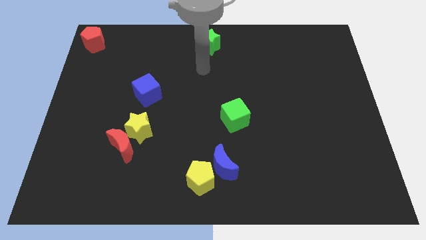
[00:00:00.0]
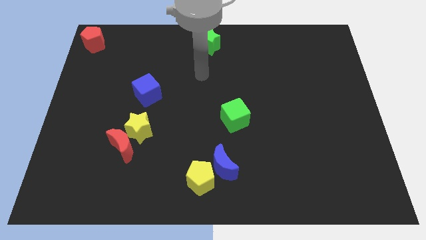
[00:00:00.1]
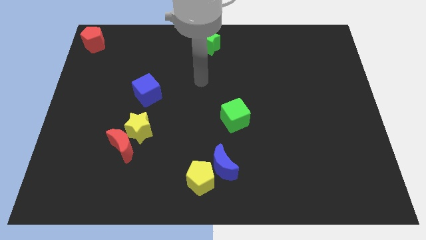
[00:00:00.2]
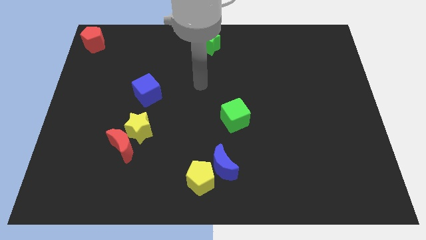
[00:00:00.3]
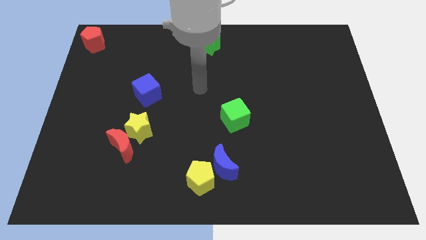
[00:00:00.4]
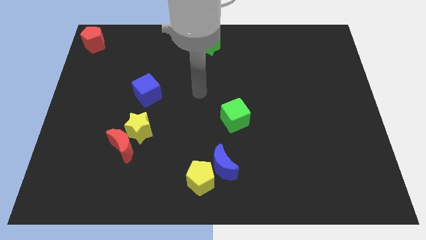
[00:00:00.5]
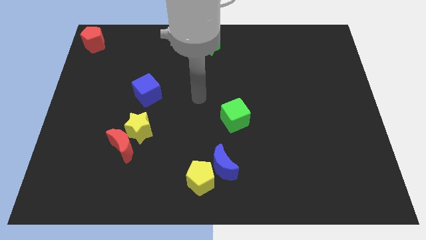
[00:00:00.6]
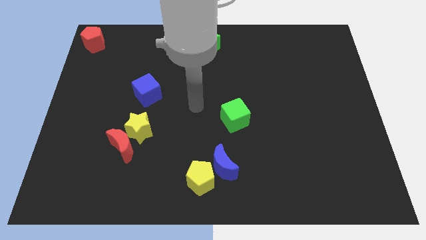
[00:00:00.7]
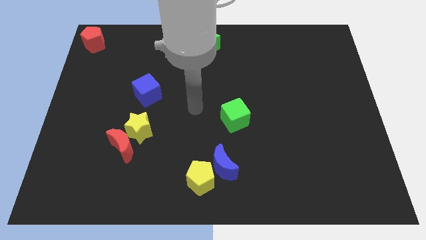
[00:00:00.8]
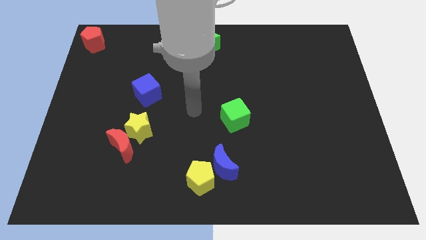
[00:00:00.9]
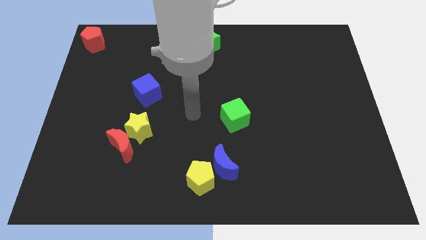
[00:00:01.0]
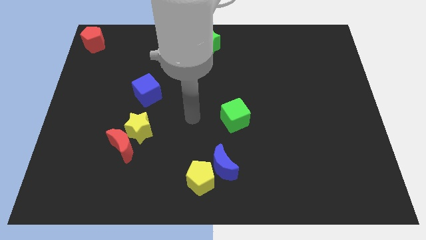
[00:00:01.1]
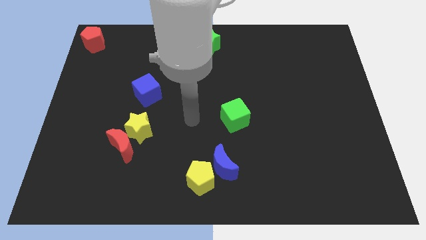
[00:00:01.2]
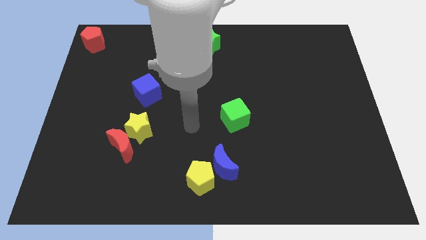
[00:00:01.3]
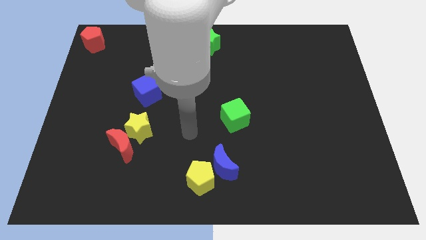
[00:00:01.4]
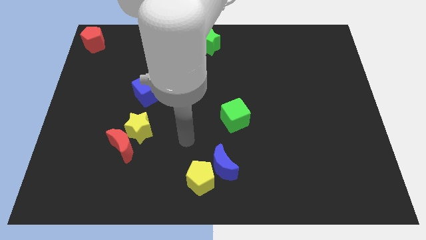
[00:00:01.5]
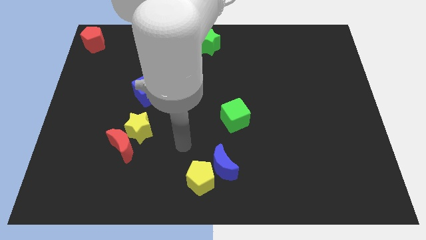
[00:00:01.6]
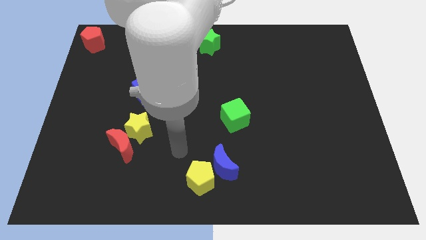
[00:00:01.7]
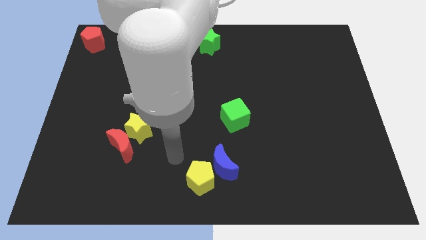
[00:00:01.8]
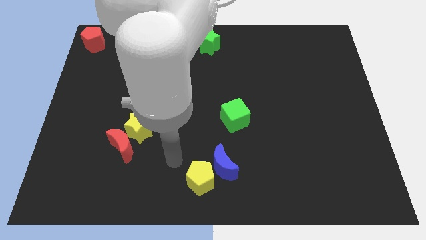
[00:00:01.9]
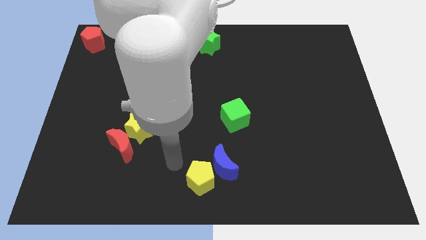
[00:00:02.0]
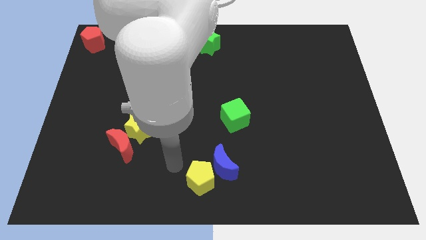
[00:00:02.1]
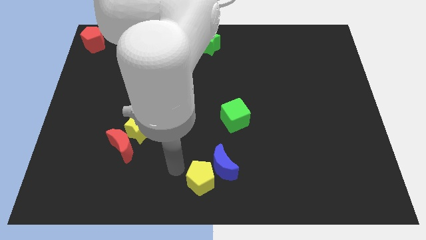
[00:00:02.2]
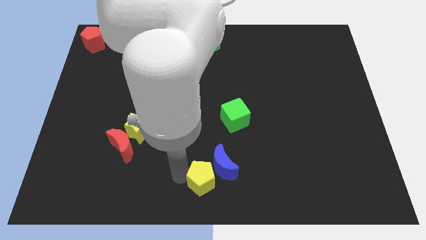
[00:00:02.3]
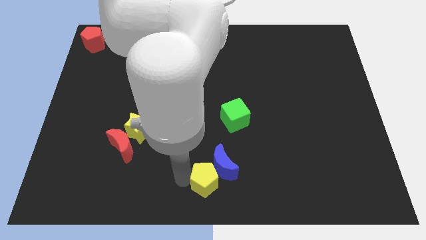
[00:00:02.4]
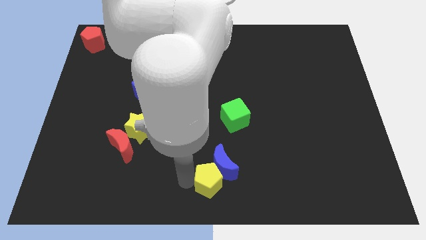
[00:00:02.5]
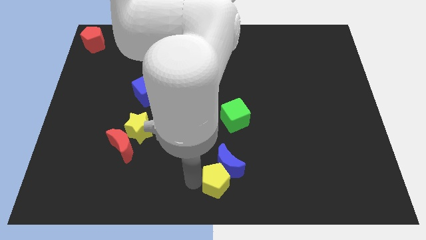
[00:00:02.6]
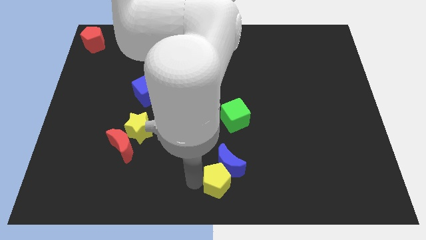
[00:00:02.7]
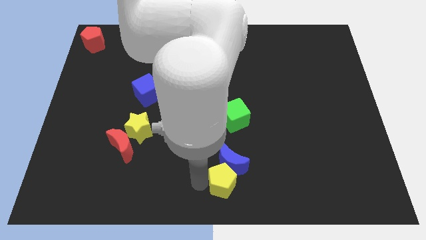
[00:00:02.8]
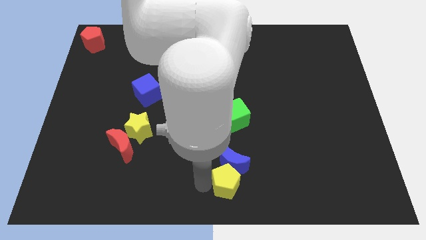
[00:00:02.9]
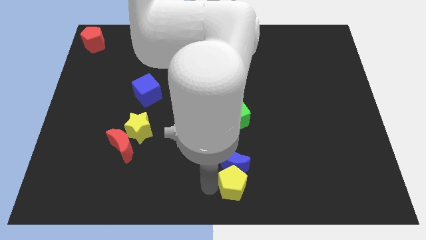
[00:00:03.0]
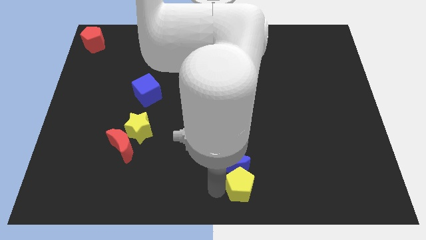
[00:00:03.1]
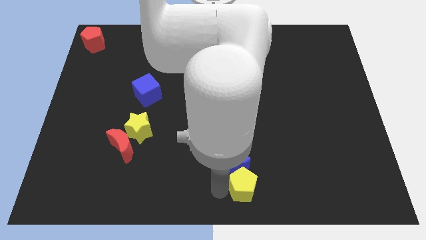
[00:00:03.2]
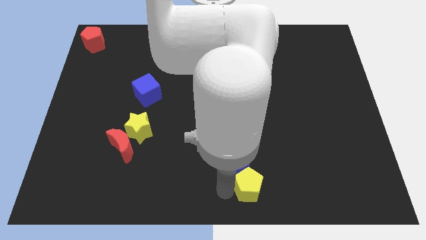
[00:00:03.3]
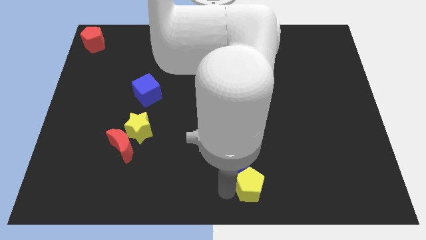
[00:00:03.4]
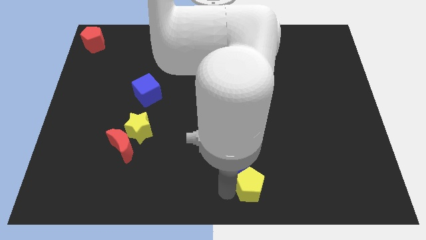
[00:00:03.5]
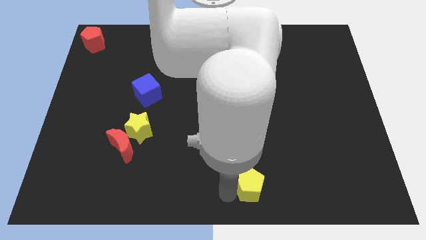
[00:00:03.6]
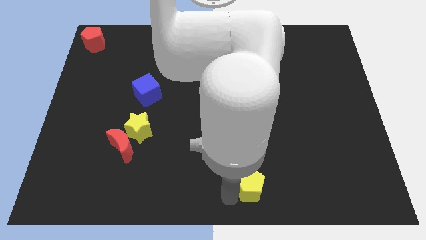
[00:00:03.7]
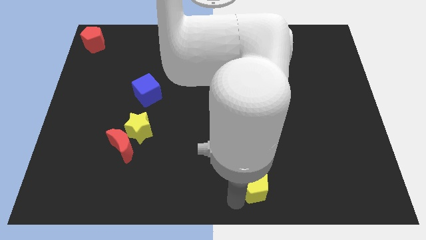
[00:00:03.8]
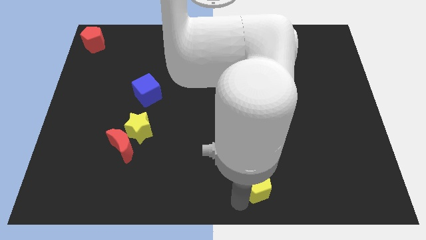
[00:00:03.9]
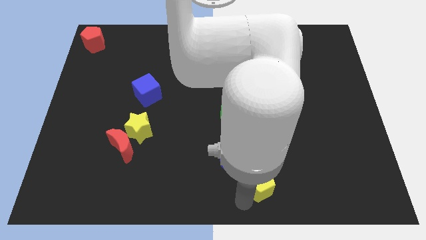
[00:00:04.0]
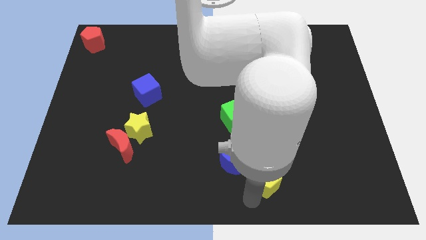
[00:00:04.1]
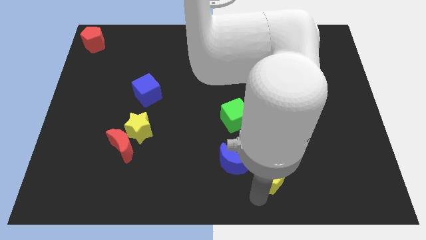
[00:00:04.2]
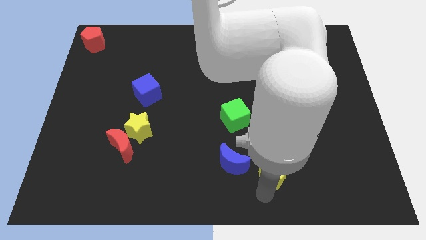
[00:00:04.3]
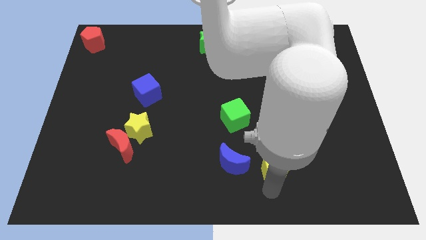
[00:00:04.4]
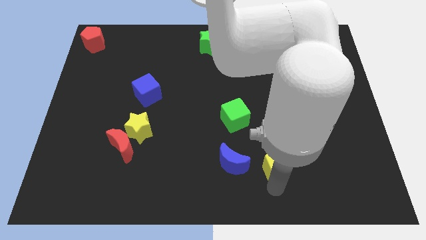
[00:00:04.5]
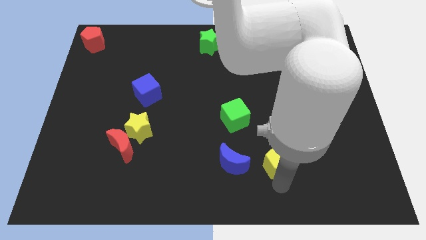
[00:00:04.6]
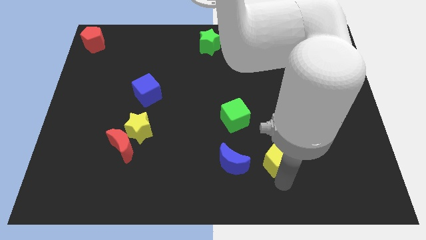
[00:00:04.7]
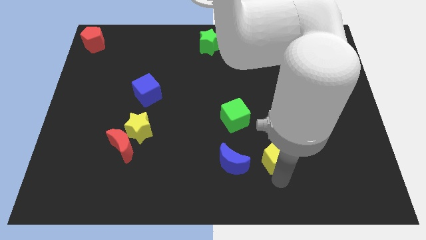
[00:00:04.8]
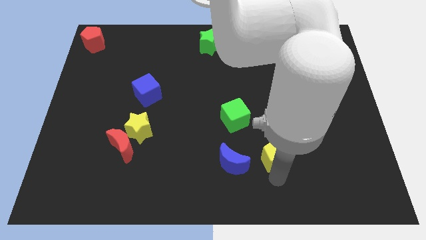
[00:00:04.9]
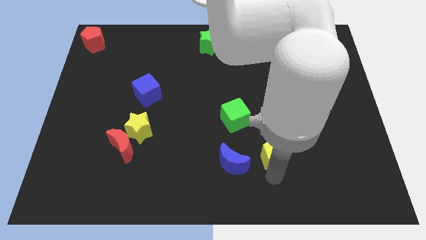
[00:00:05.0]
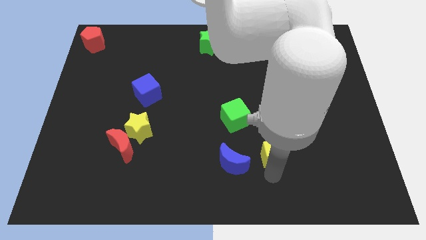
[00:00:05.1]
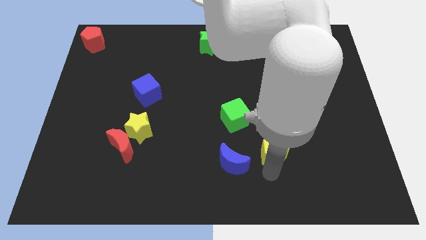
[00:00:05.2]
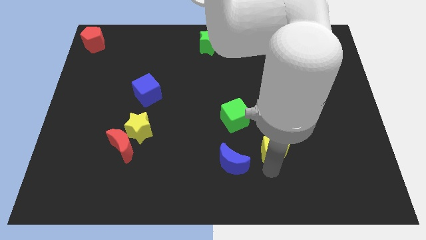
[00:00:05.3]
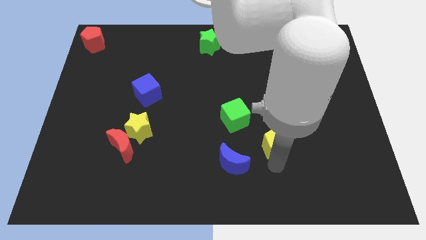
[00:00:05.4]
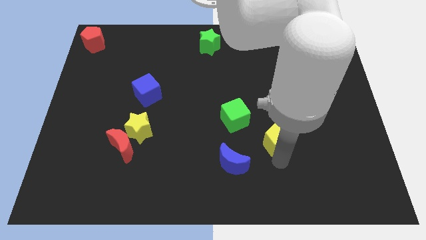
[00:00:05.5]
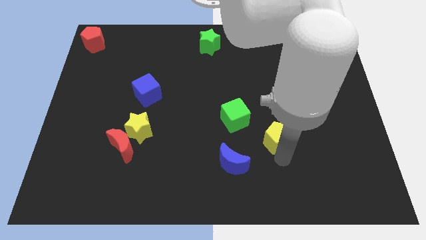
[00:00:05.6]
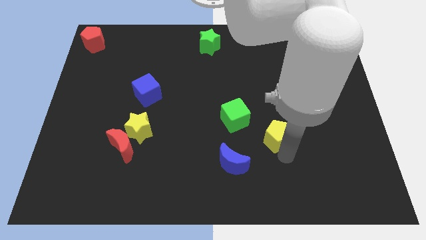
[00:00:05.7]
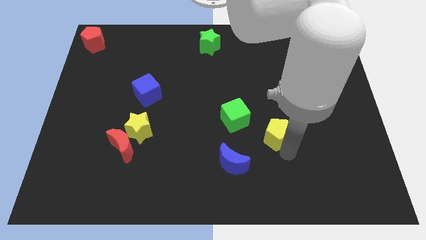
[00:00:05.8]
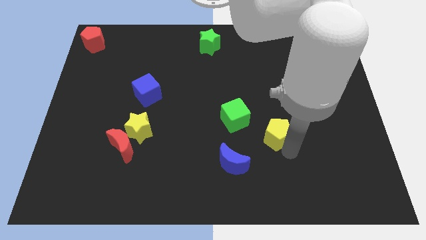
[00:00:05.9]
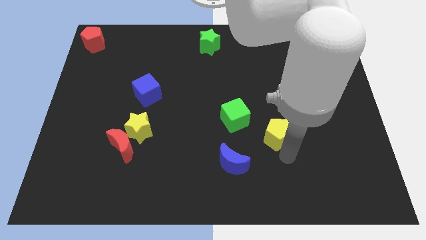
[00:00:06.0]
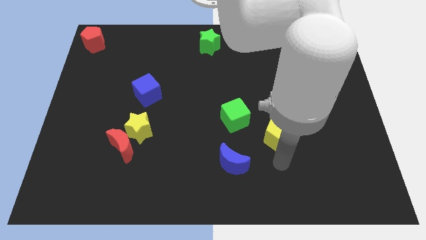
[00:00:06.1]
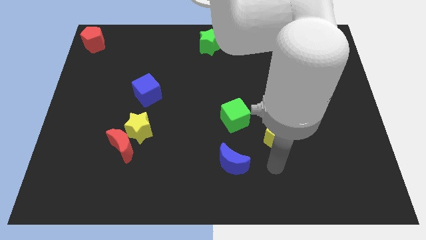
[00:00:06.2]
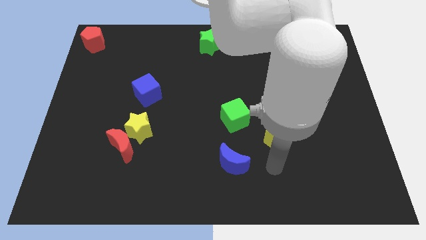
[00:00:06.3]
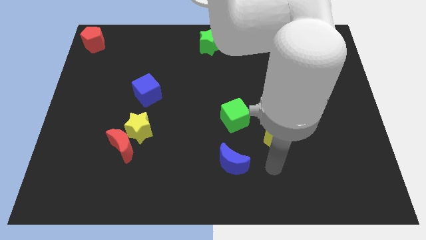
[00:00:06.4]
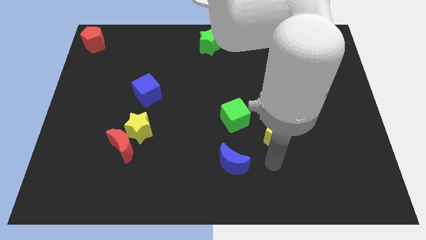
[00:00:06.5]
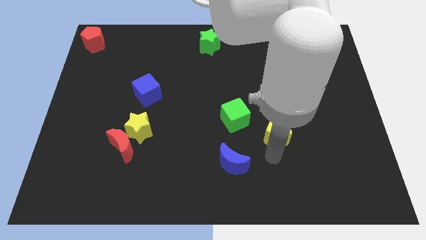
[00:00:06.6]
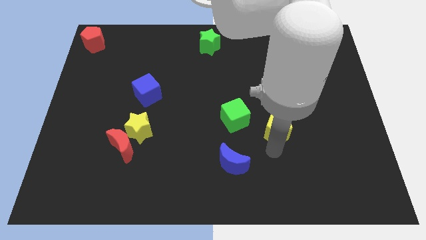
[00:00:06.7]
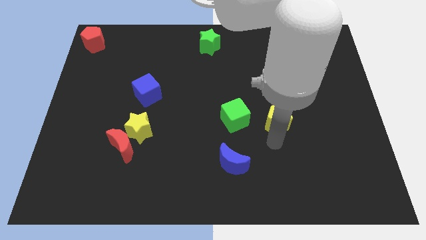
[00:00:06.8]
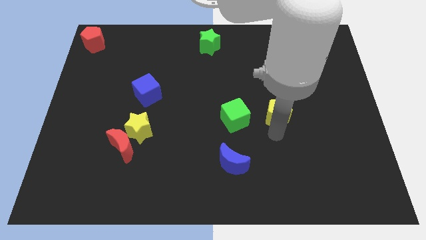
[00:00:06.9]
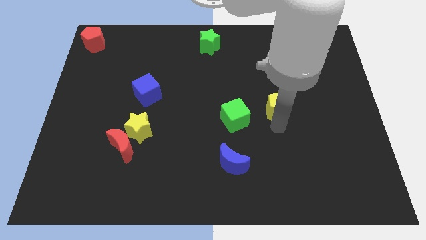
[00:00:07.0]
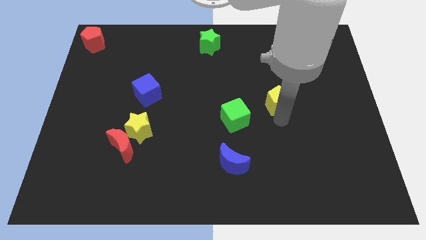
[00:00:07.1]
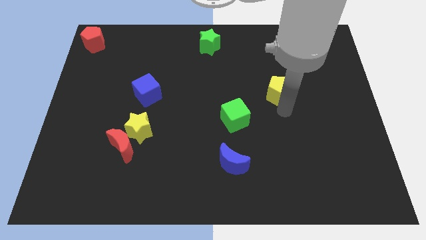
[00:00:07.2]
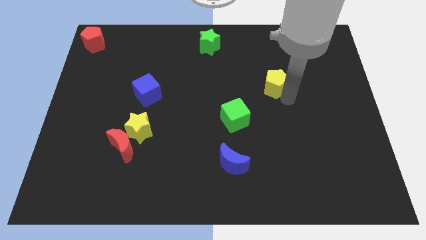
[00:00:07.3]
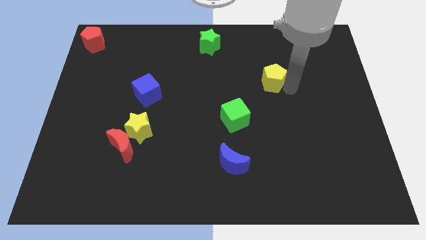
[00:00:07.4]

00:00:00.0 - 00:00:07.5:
move the yellow pentagon away from the left side of the blue crescent

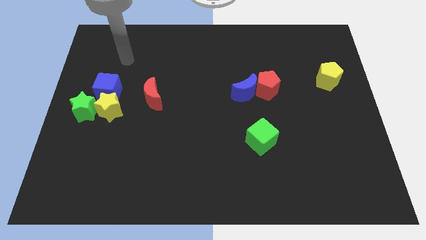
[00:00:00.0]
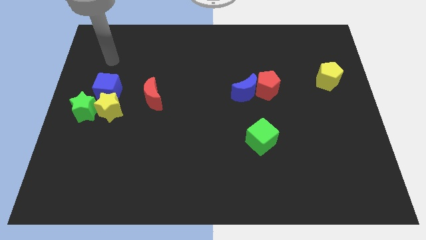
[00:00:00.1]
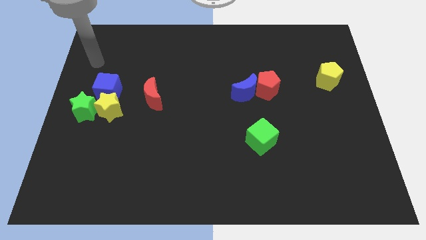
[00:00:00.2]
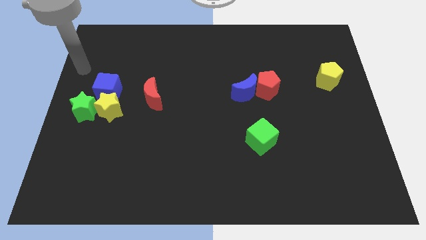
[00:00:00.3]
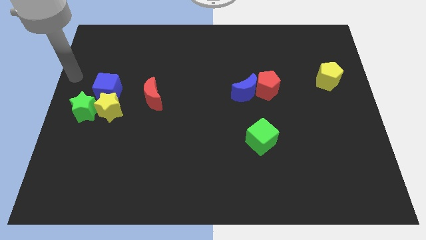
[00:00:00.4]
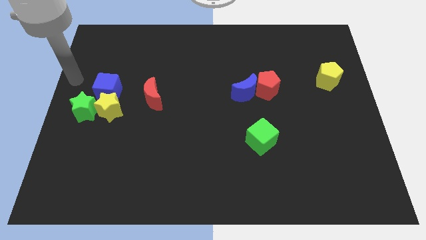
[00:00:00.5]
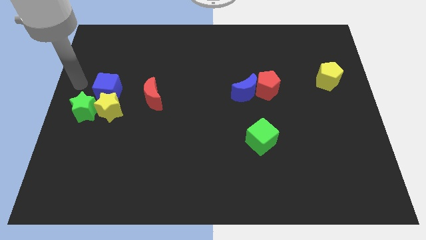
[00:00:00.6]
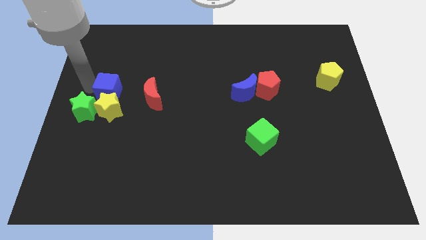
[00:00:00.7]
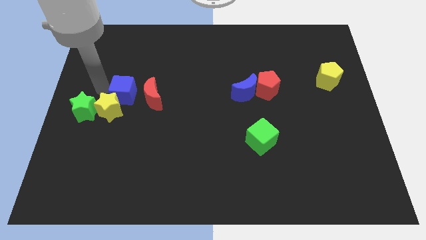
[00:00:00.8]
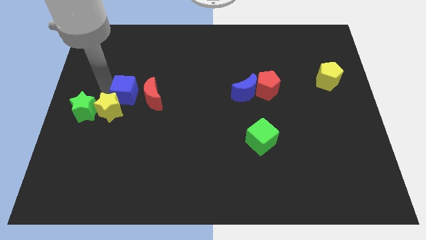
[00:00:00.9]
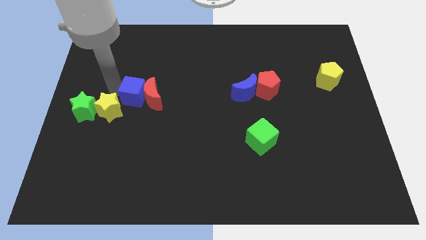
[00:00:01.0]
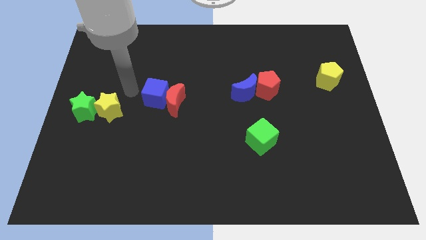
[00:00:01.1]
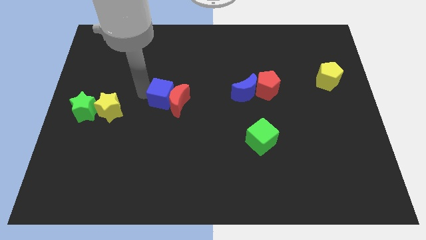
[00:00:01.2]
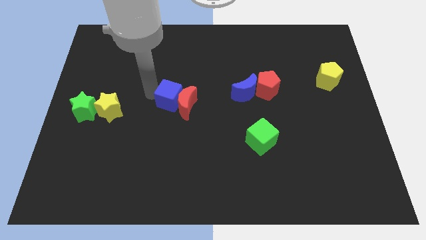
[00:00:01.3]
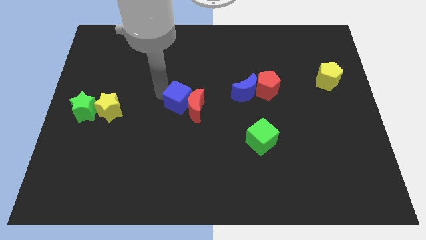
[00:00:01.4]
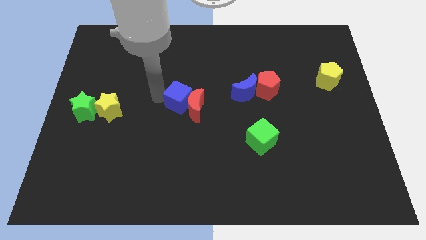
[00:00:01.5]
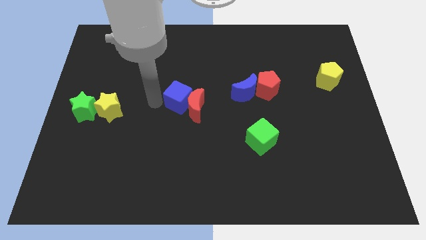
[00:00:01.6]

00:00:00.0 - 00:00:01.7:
push the blue cube into the red crescent
